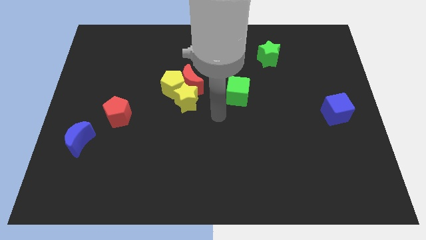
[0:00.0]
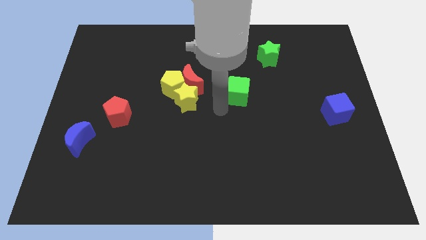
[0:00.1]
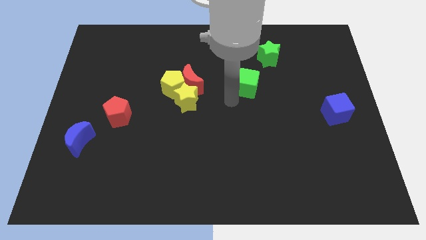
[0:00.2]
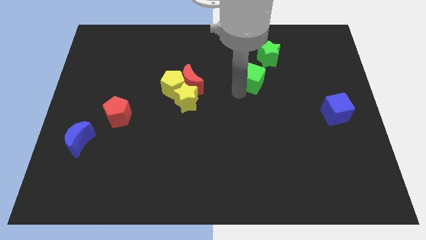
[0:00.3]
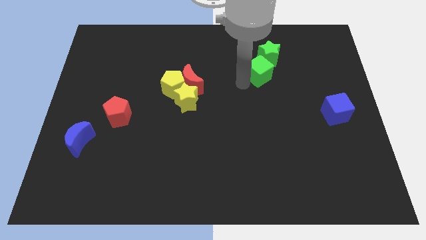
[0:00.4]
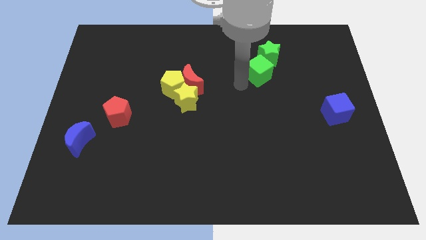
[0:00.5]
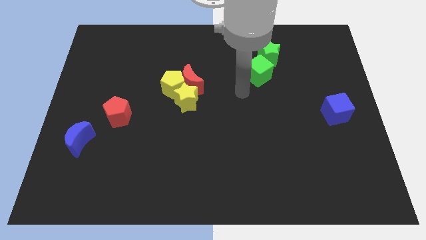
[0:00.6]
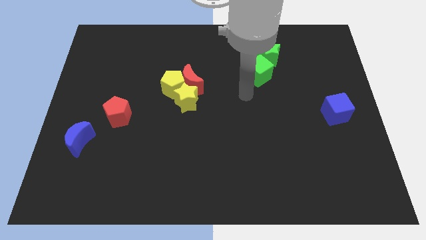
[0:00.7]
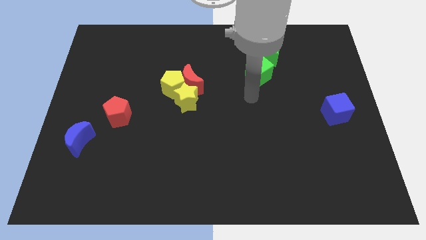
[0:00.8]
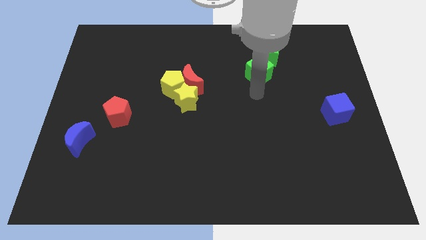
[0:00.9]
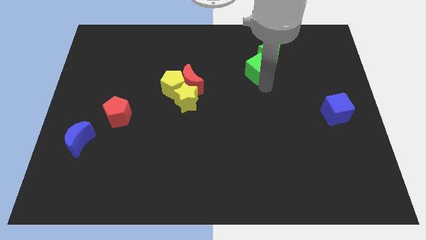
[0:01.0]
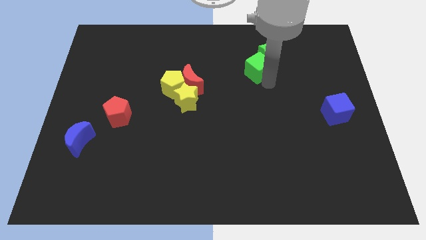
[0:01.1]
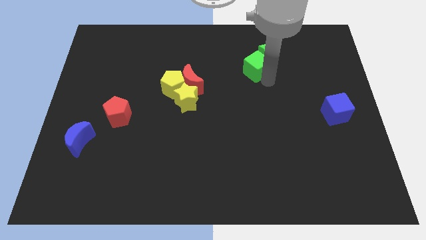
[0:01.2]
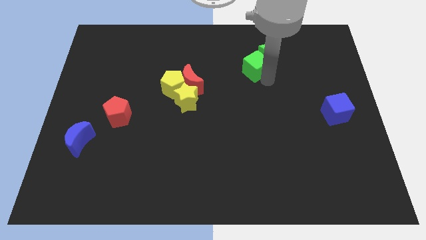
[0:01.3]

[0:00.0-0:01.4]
push the green cube to the bottom left of the green star

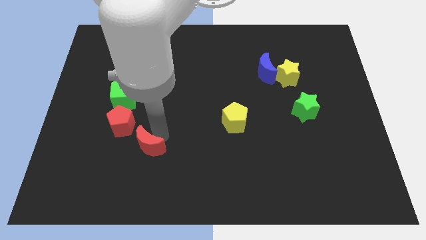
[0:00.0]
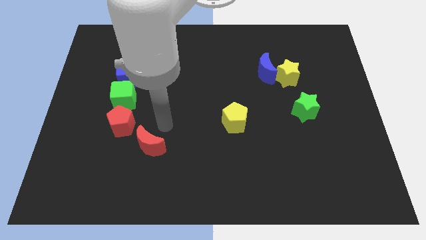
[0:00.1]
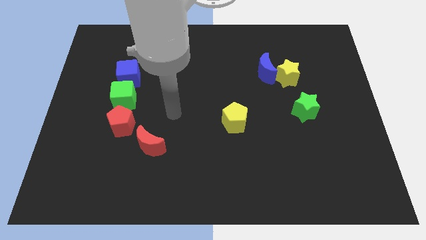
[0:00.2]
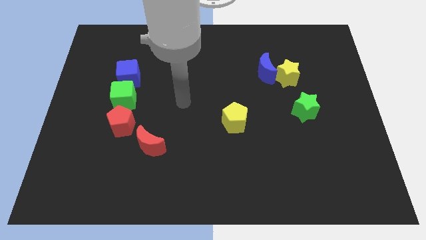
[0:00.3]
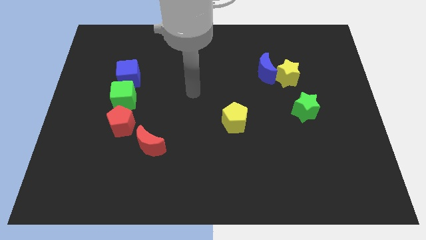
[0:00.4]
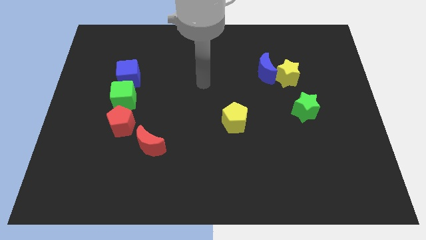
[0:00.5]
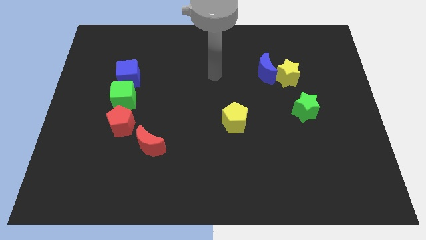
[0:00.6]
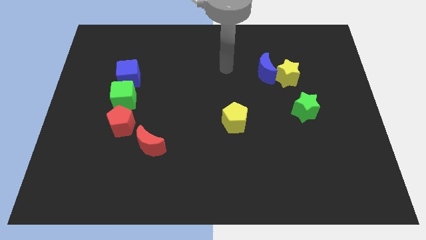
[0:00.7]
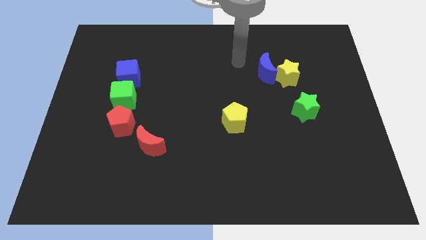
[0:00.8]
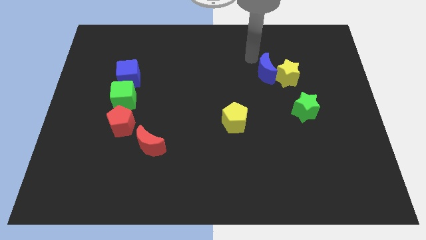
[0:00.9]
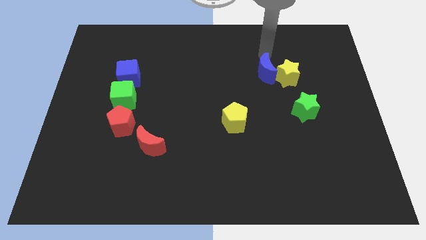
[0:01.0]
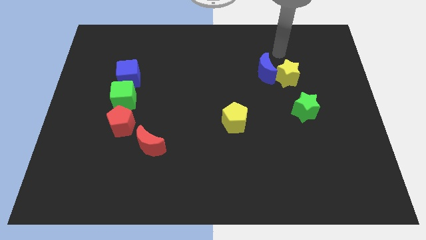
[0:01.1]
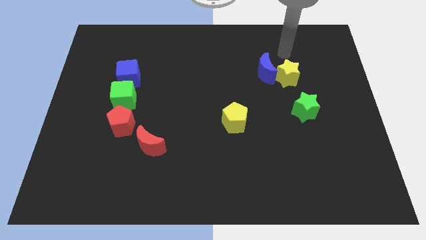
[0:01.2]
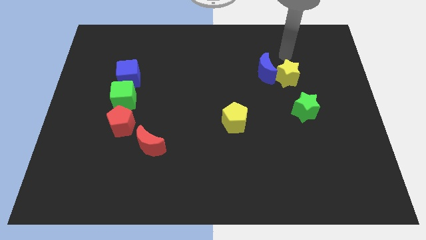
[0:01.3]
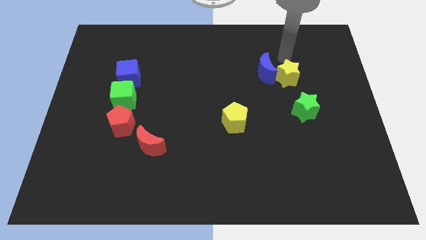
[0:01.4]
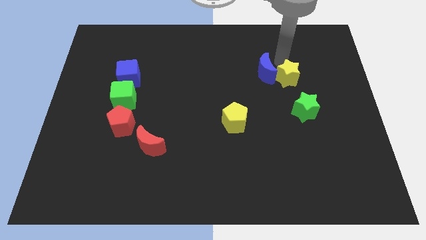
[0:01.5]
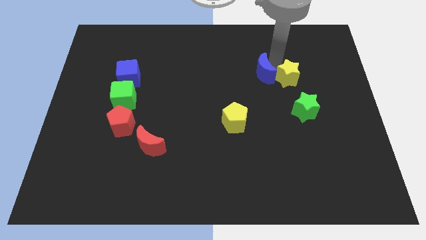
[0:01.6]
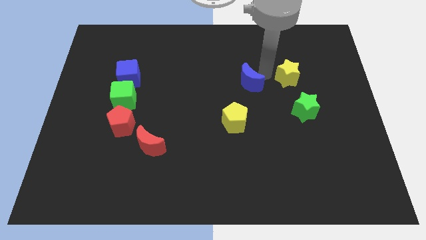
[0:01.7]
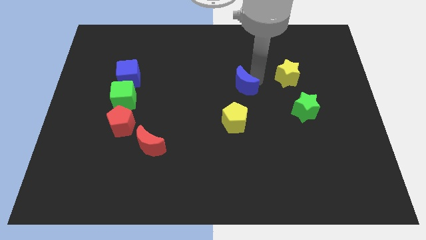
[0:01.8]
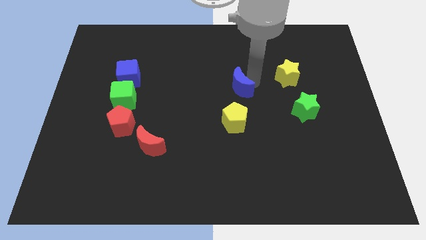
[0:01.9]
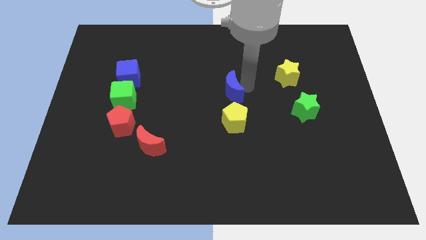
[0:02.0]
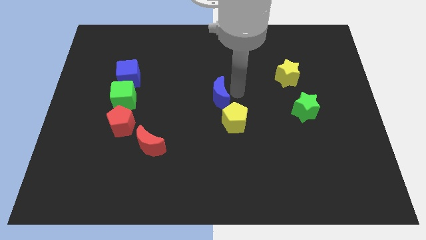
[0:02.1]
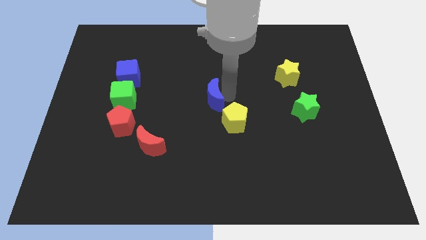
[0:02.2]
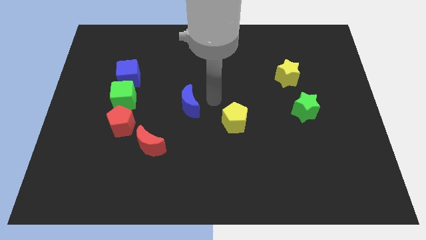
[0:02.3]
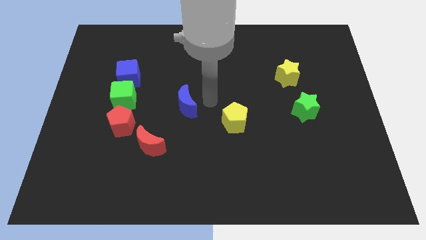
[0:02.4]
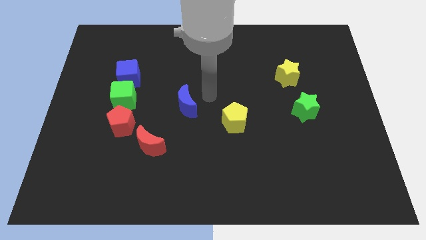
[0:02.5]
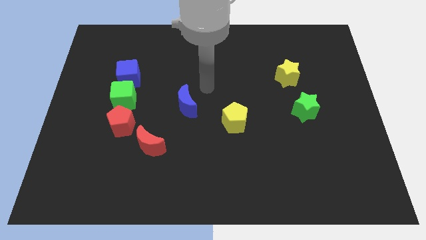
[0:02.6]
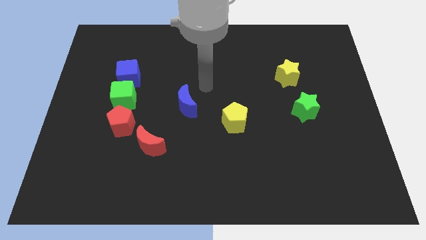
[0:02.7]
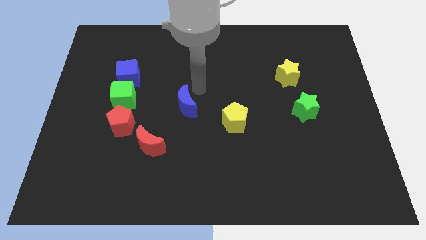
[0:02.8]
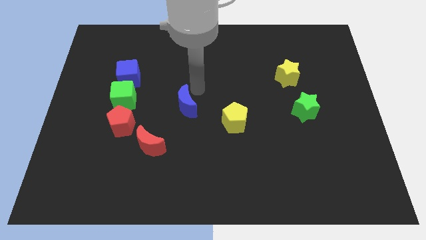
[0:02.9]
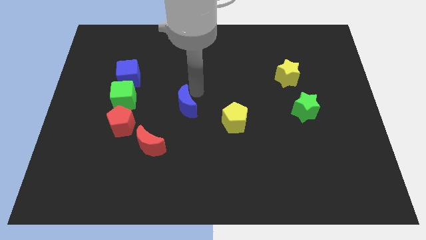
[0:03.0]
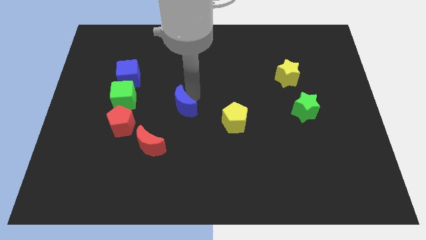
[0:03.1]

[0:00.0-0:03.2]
separate the blue moon and the yellow star

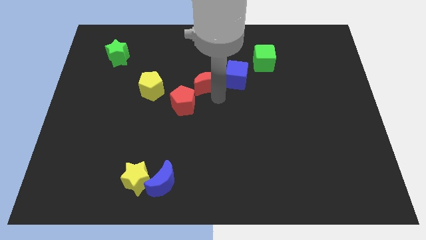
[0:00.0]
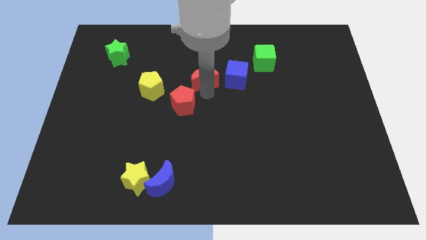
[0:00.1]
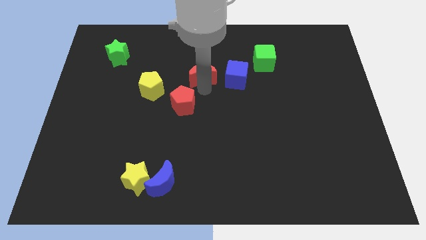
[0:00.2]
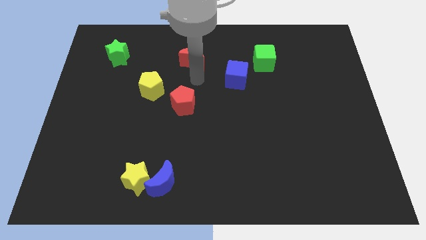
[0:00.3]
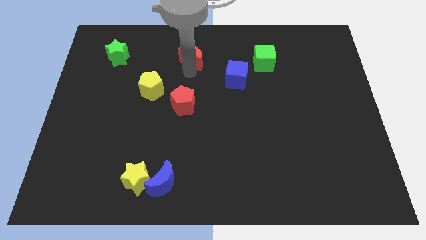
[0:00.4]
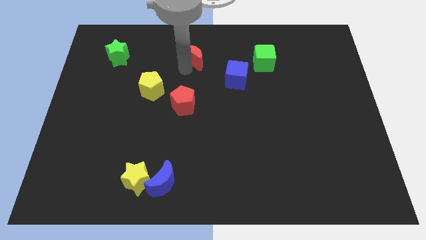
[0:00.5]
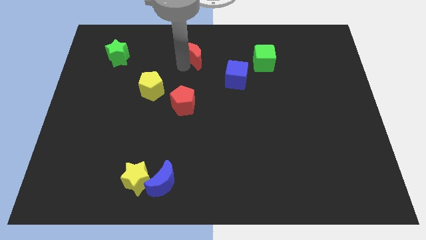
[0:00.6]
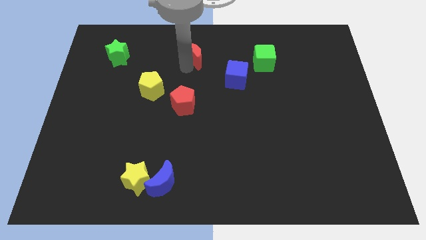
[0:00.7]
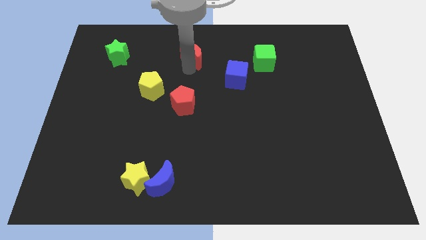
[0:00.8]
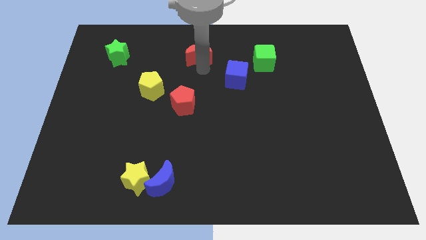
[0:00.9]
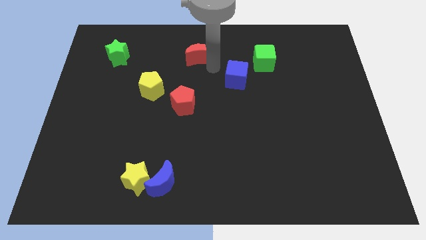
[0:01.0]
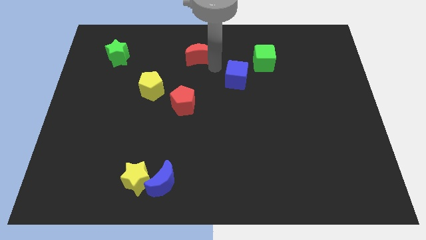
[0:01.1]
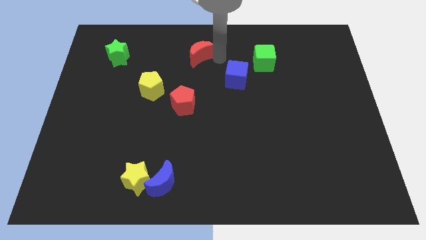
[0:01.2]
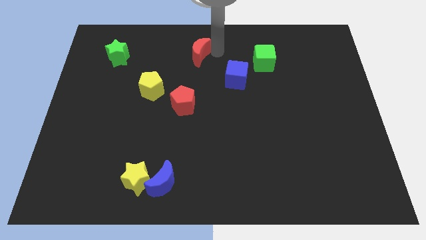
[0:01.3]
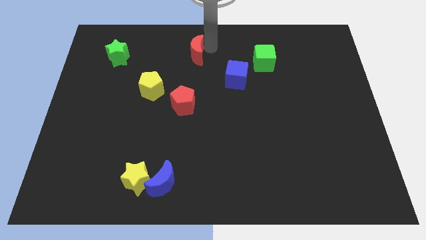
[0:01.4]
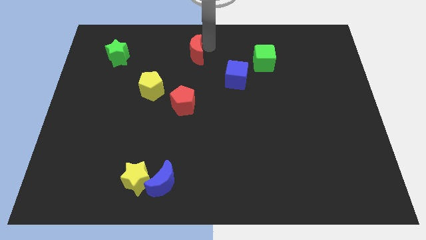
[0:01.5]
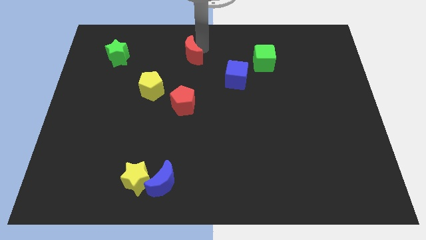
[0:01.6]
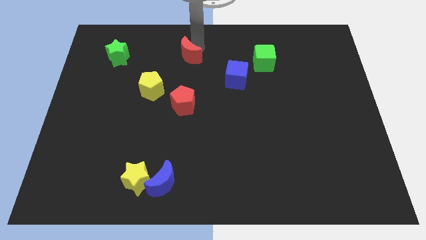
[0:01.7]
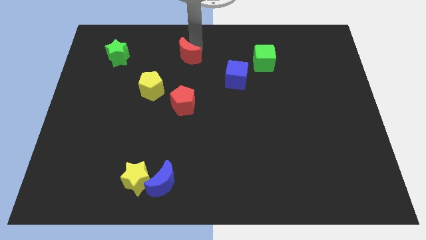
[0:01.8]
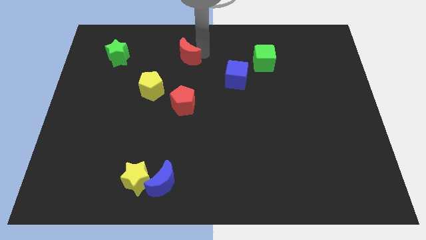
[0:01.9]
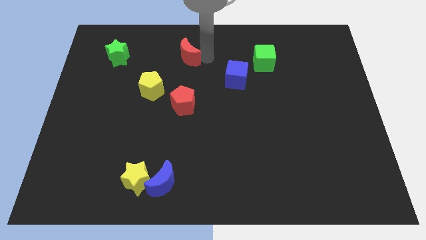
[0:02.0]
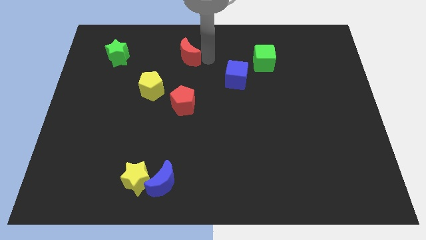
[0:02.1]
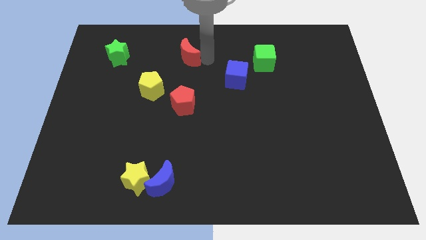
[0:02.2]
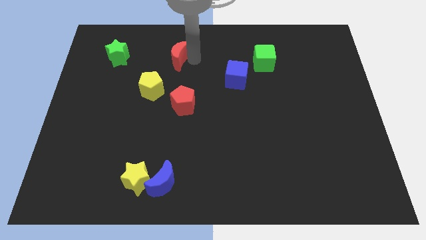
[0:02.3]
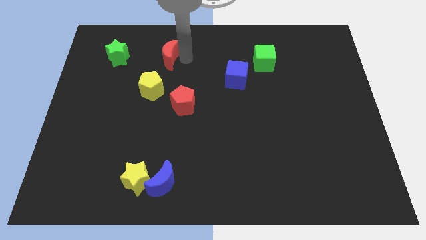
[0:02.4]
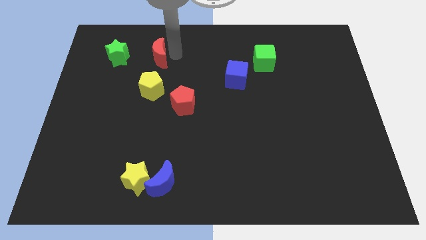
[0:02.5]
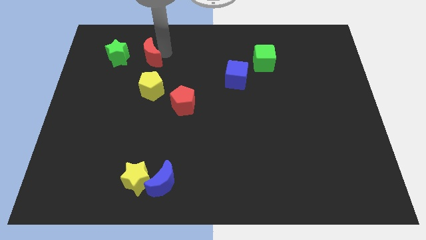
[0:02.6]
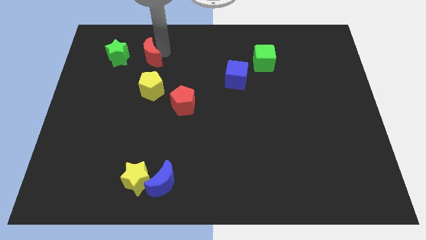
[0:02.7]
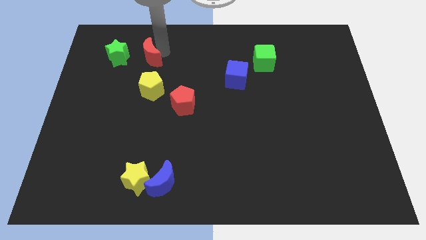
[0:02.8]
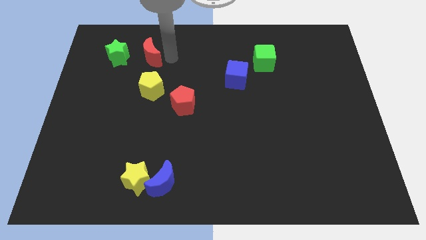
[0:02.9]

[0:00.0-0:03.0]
move the red moon above to the yellow pentagon

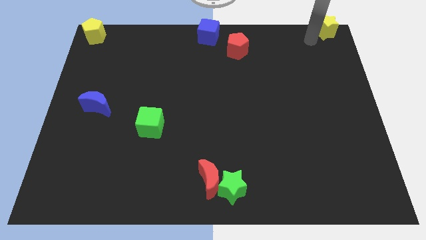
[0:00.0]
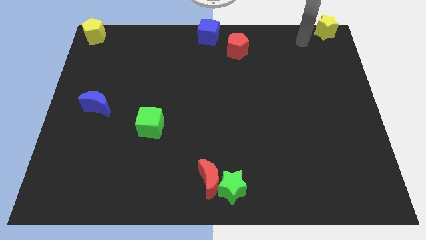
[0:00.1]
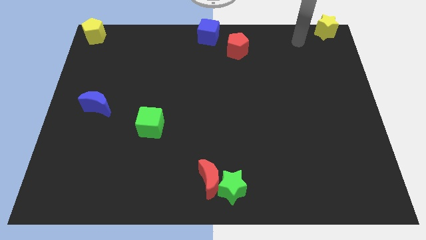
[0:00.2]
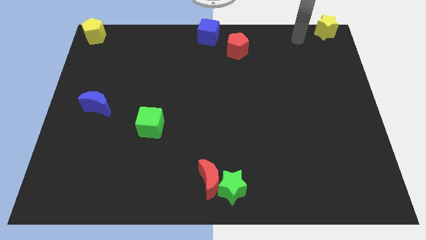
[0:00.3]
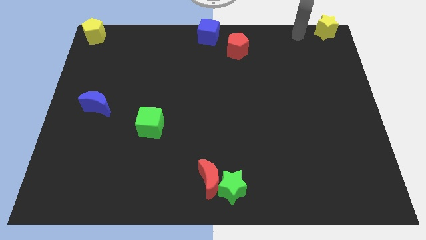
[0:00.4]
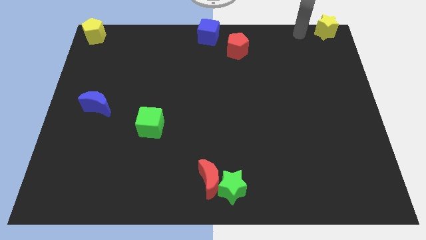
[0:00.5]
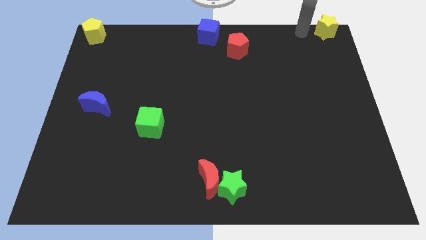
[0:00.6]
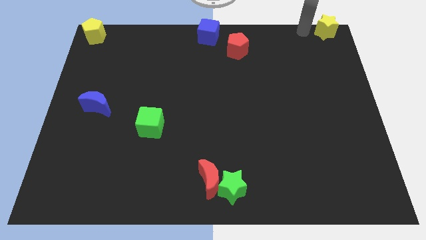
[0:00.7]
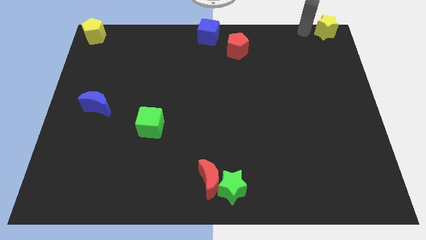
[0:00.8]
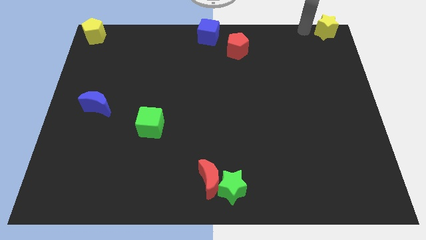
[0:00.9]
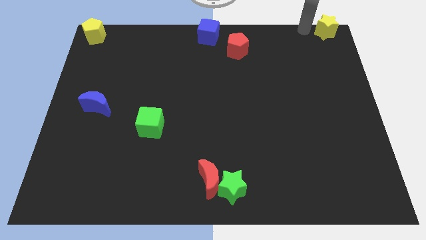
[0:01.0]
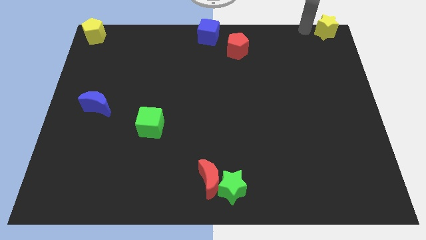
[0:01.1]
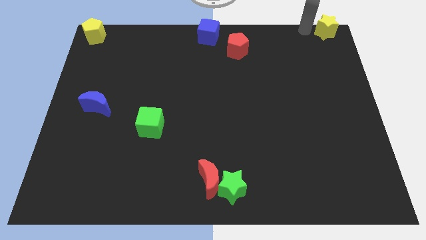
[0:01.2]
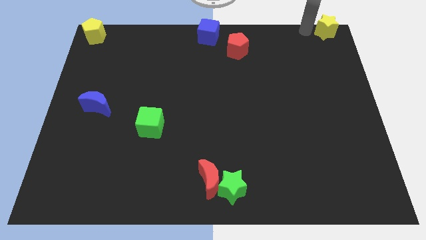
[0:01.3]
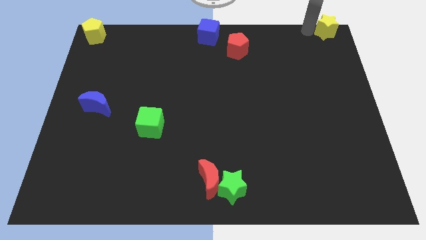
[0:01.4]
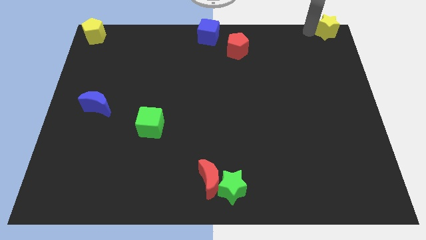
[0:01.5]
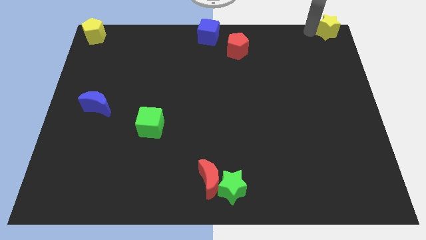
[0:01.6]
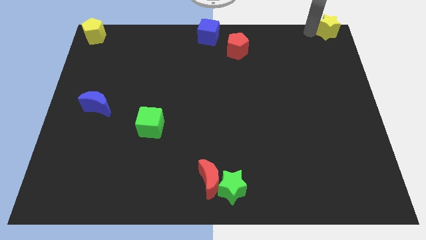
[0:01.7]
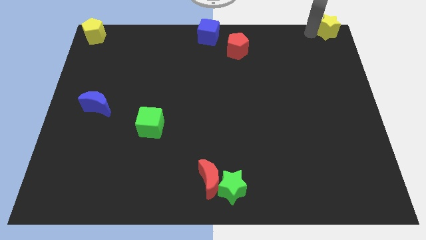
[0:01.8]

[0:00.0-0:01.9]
push the yellow star to the top right of the board
